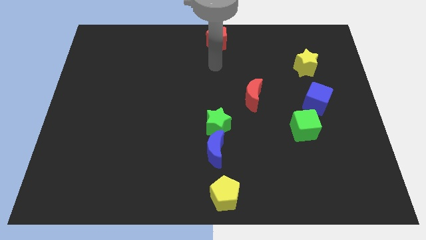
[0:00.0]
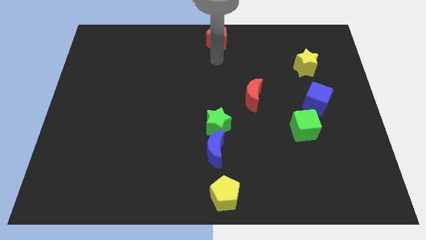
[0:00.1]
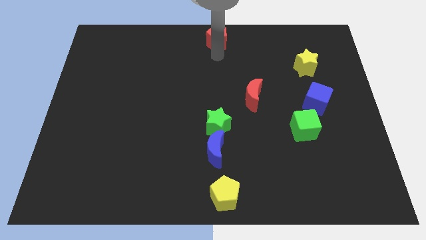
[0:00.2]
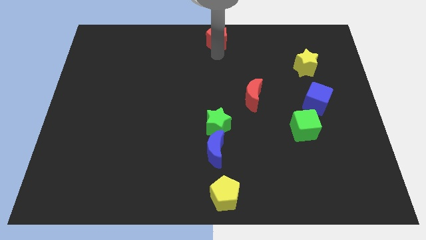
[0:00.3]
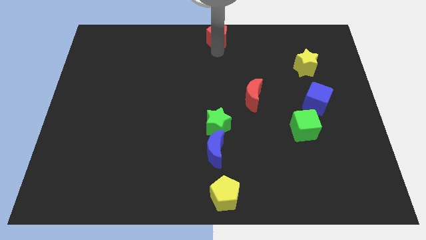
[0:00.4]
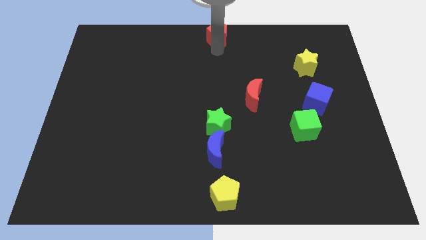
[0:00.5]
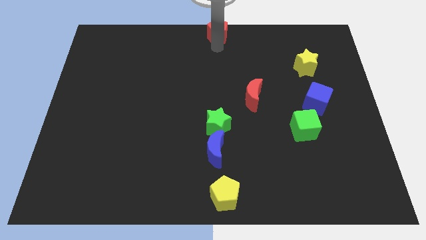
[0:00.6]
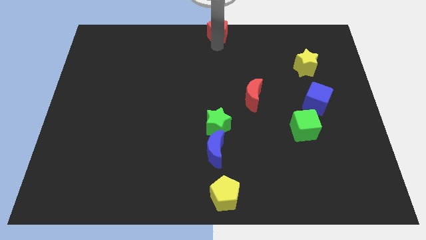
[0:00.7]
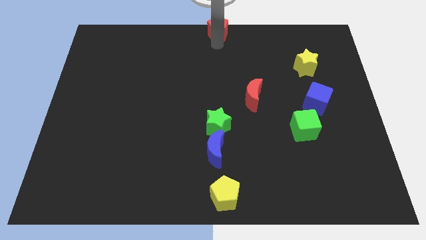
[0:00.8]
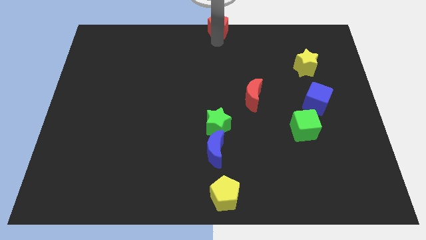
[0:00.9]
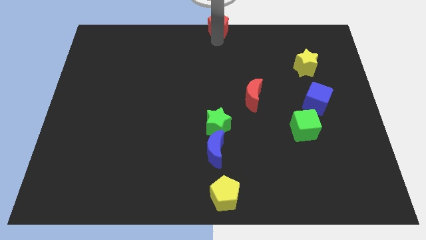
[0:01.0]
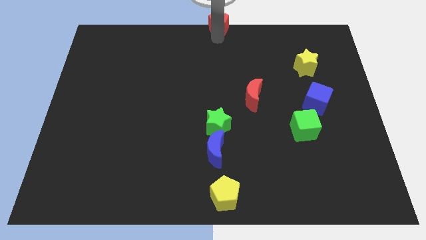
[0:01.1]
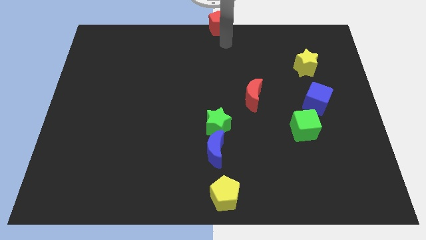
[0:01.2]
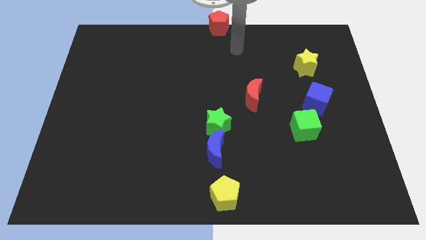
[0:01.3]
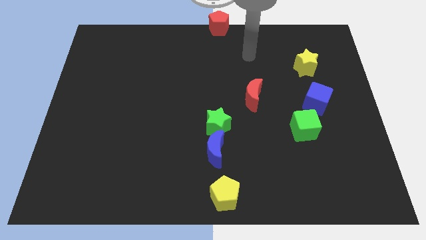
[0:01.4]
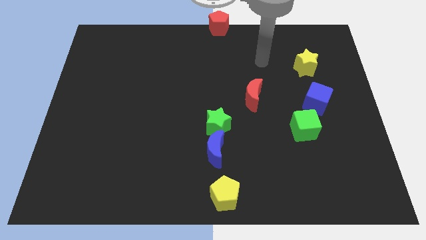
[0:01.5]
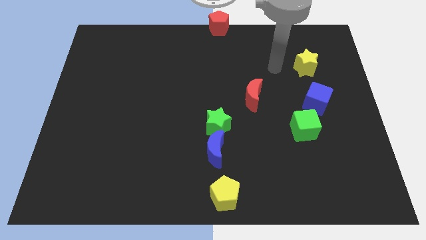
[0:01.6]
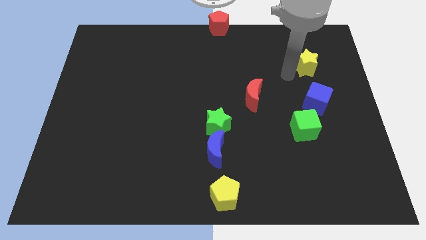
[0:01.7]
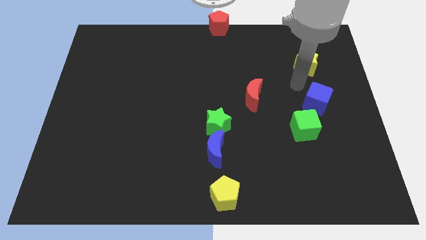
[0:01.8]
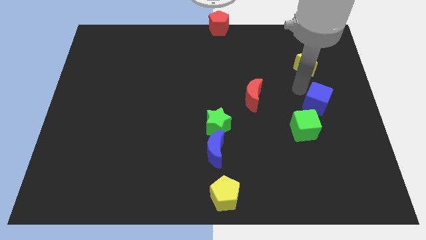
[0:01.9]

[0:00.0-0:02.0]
move your arm towards the blue cube

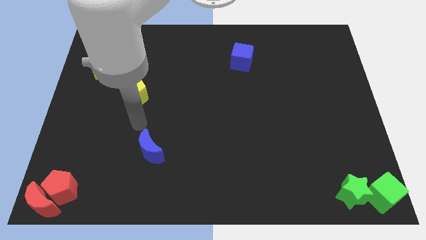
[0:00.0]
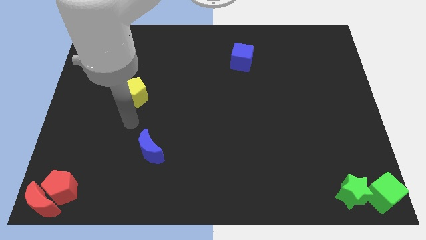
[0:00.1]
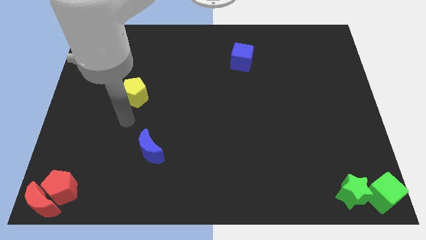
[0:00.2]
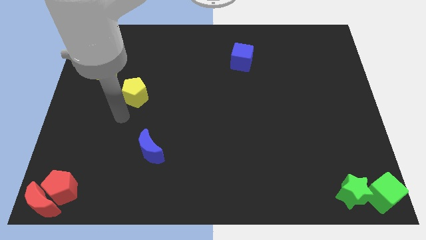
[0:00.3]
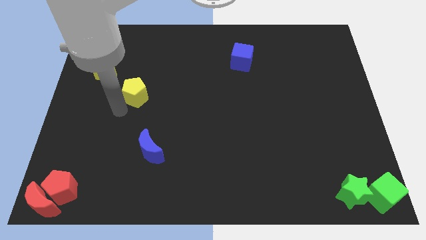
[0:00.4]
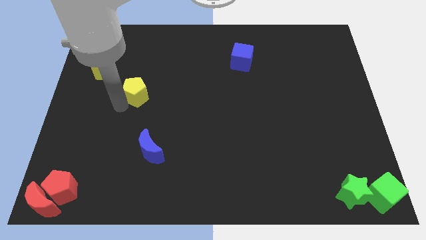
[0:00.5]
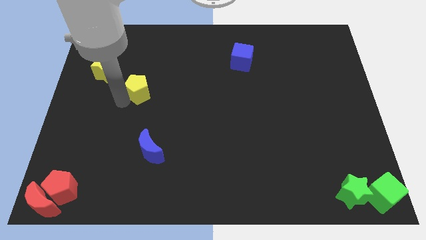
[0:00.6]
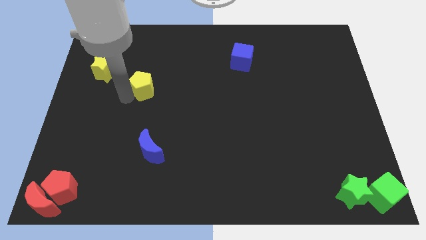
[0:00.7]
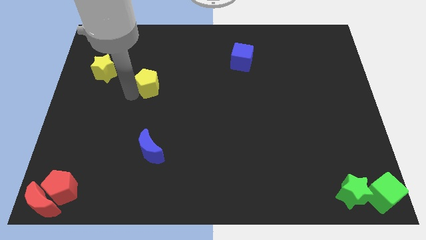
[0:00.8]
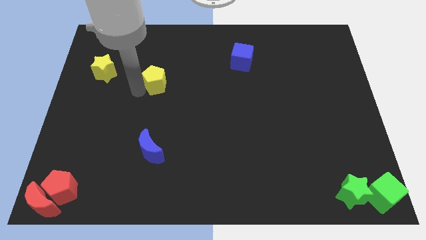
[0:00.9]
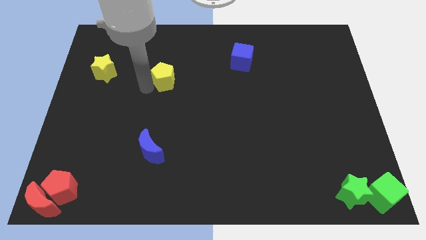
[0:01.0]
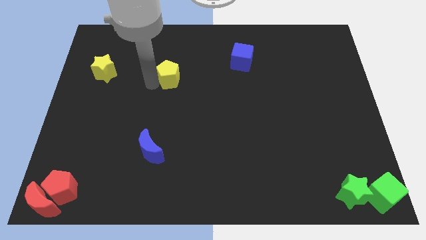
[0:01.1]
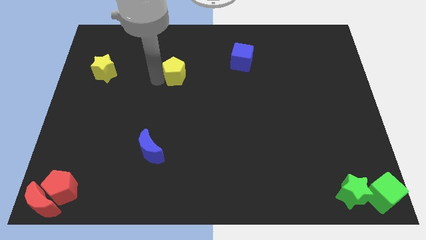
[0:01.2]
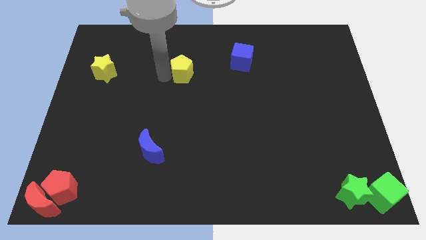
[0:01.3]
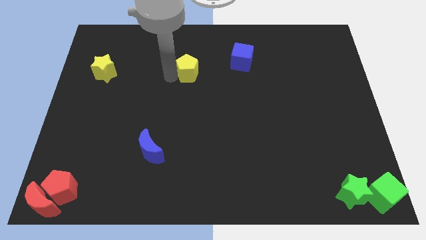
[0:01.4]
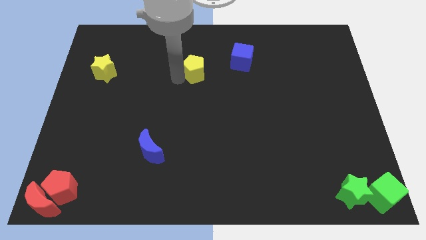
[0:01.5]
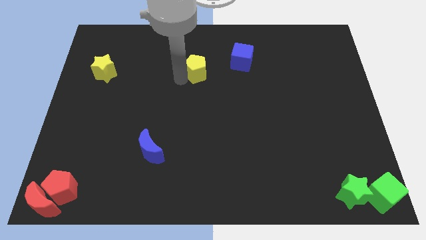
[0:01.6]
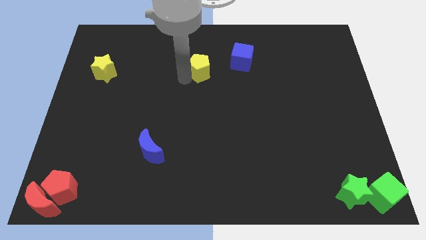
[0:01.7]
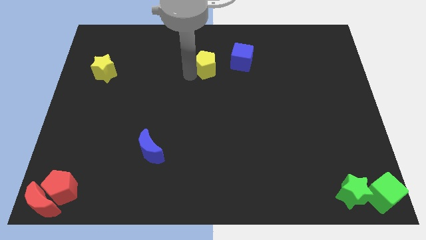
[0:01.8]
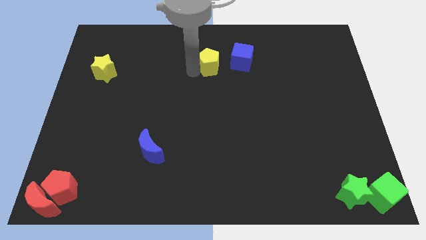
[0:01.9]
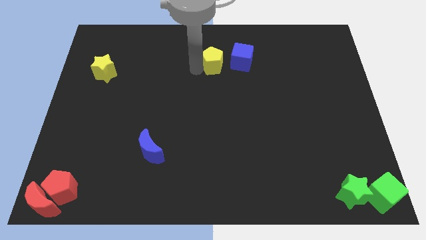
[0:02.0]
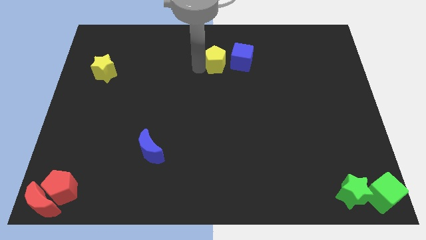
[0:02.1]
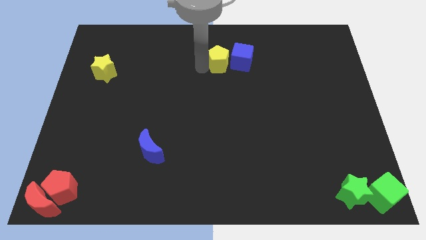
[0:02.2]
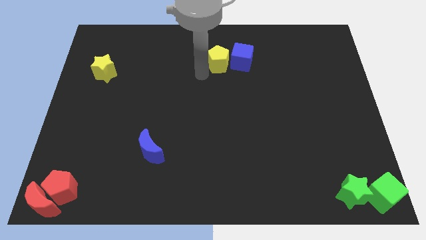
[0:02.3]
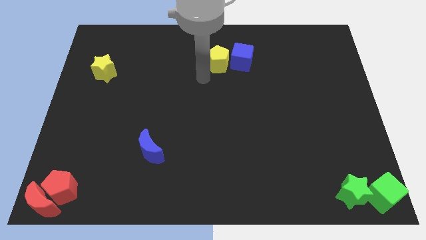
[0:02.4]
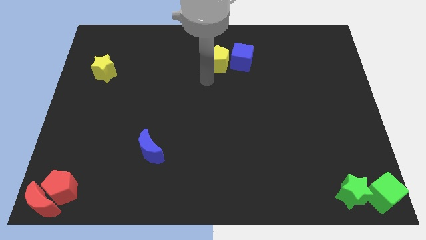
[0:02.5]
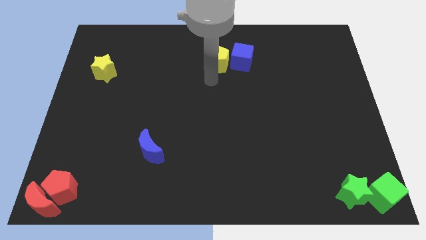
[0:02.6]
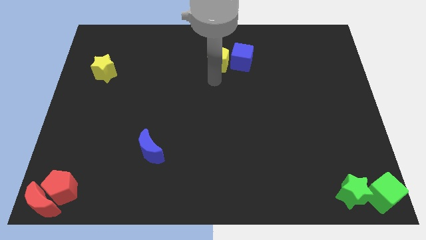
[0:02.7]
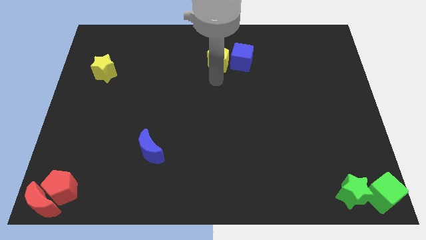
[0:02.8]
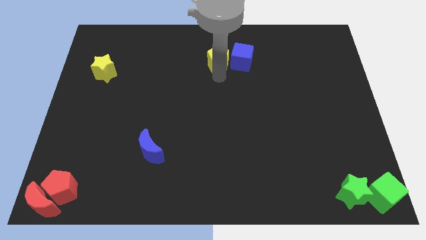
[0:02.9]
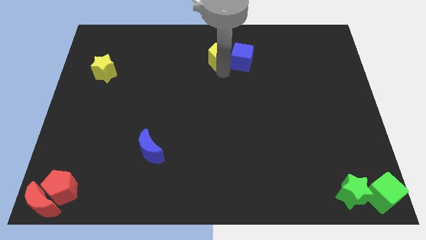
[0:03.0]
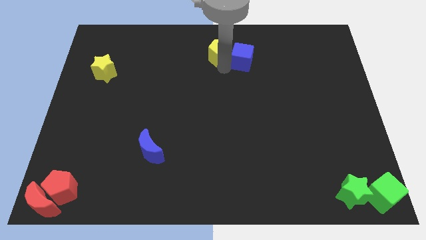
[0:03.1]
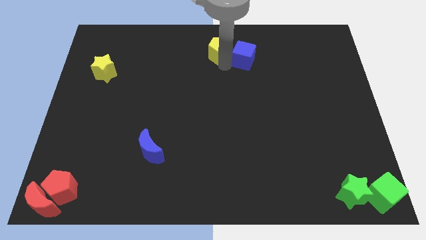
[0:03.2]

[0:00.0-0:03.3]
push the yellow pentagon to the left of the blue cube

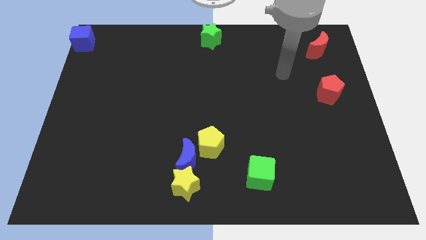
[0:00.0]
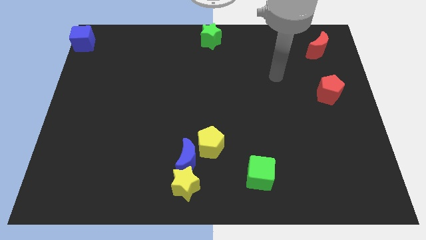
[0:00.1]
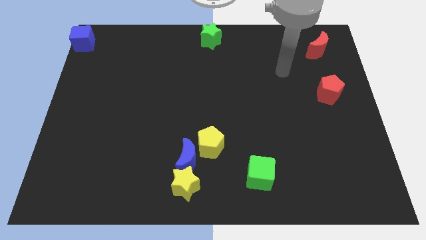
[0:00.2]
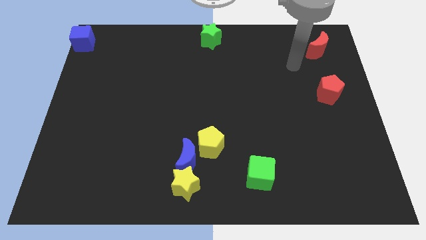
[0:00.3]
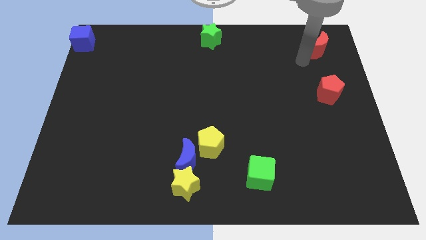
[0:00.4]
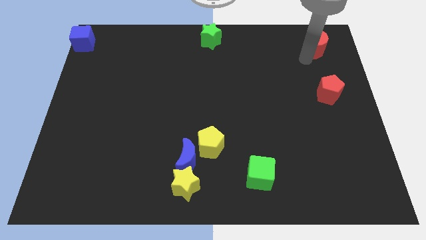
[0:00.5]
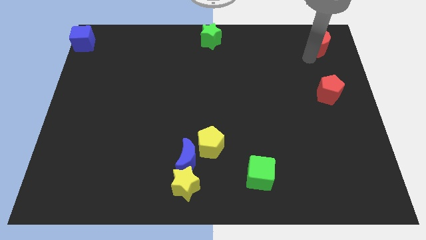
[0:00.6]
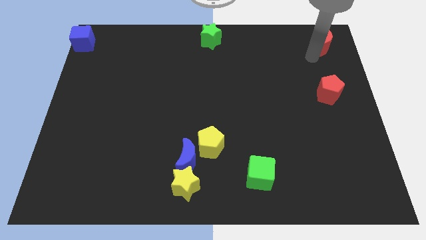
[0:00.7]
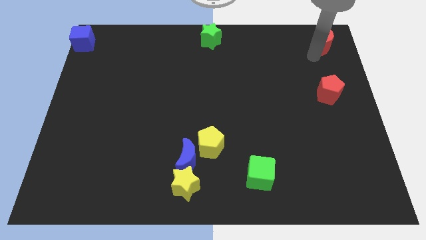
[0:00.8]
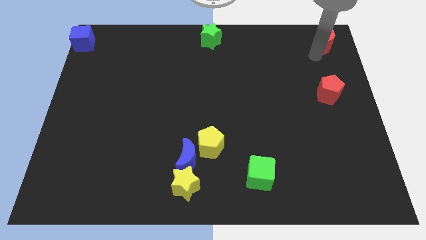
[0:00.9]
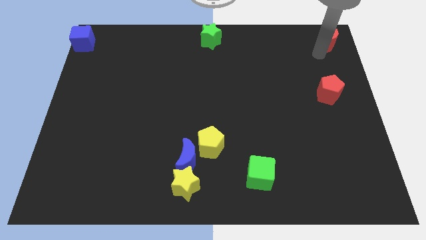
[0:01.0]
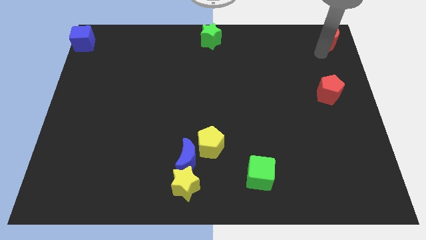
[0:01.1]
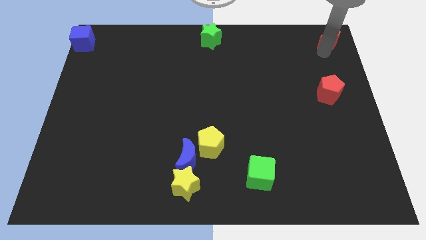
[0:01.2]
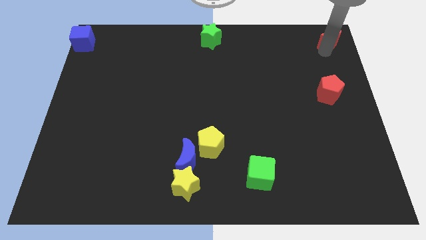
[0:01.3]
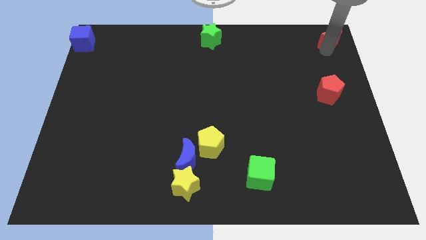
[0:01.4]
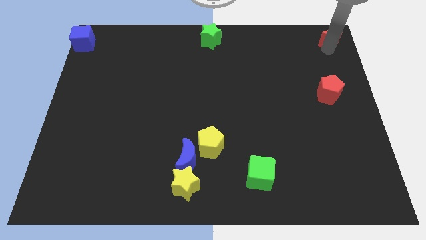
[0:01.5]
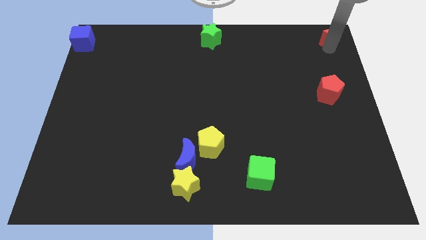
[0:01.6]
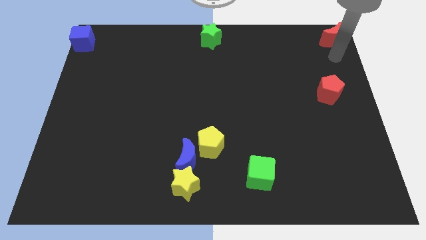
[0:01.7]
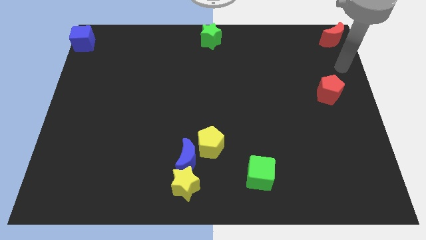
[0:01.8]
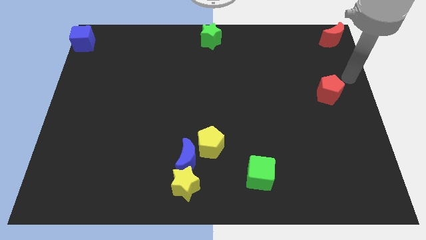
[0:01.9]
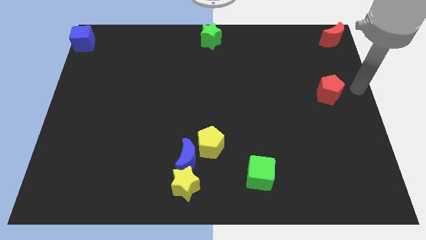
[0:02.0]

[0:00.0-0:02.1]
push the red crescent at the top right corner

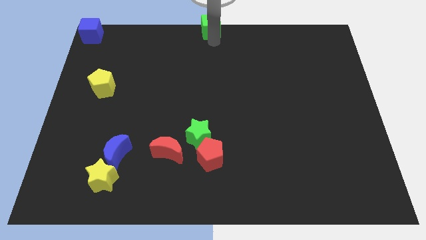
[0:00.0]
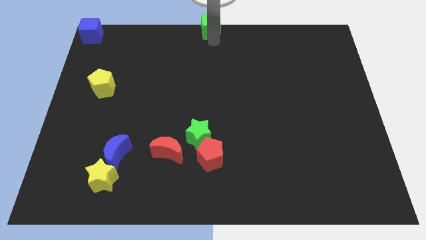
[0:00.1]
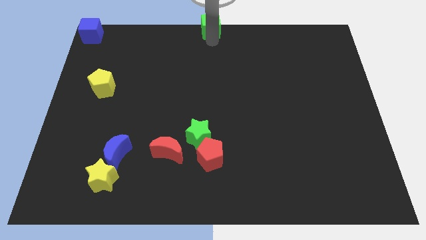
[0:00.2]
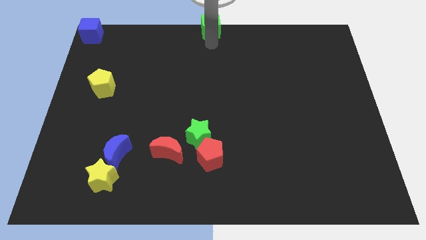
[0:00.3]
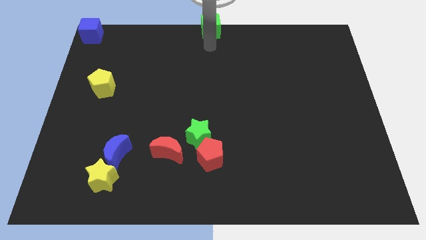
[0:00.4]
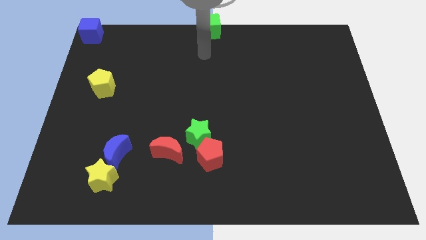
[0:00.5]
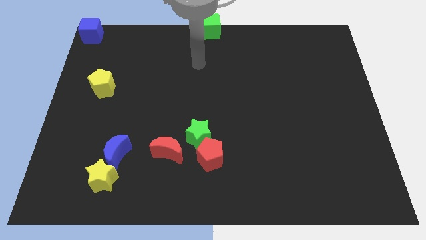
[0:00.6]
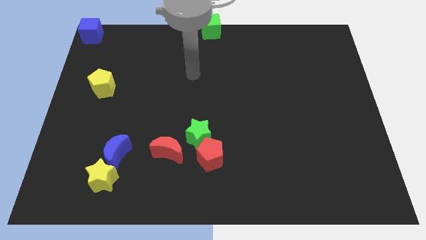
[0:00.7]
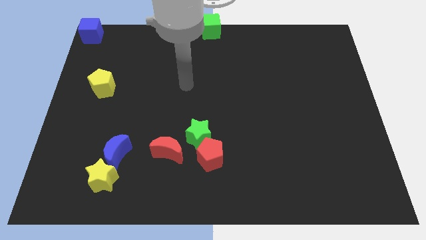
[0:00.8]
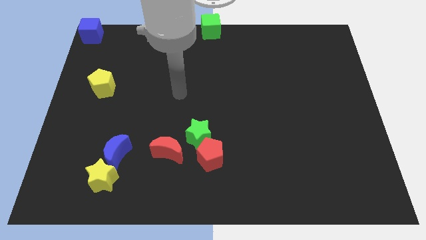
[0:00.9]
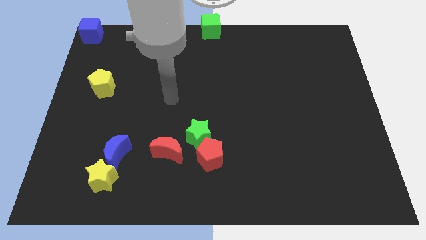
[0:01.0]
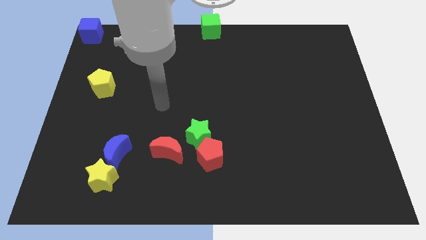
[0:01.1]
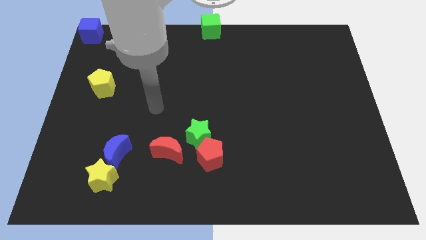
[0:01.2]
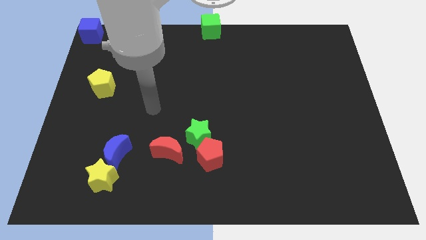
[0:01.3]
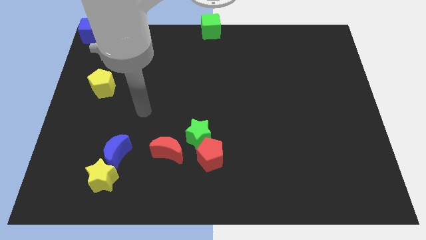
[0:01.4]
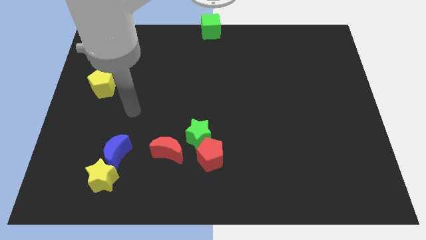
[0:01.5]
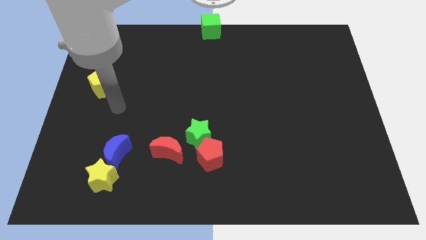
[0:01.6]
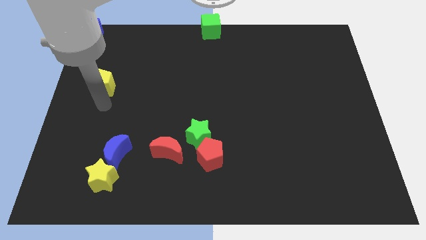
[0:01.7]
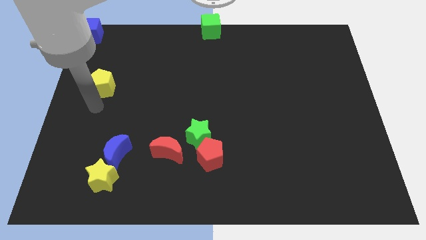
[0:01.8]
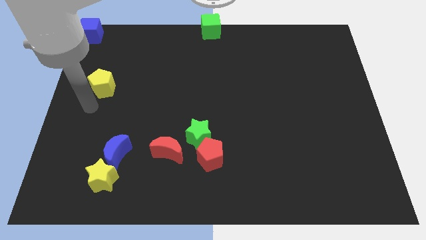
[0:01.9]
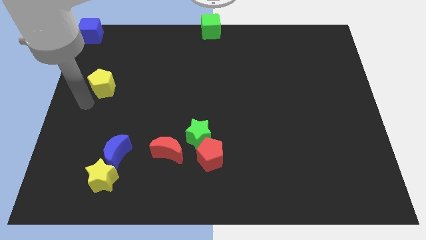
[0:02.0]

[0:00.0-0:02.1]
move your arm from the green cube
